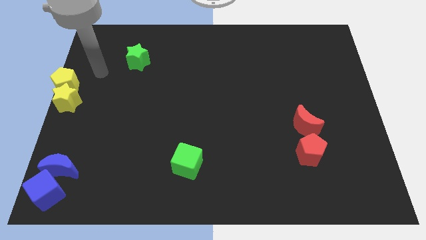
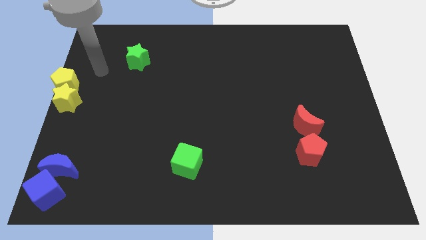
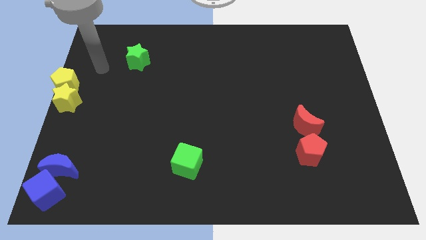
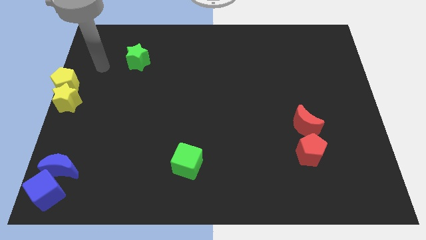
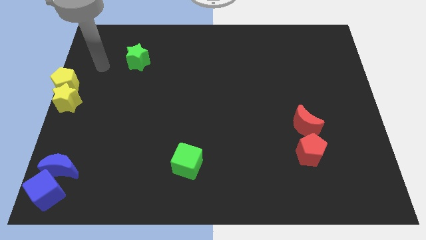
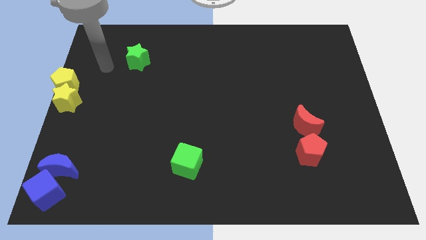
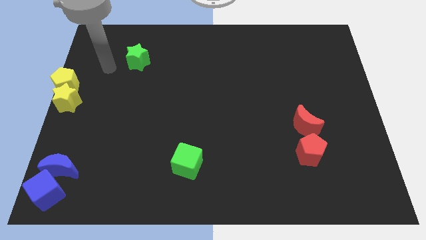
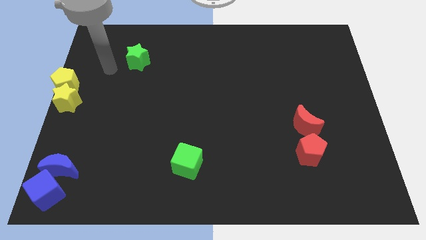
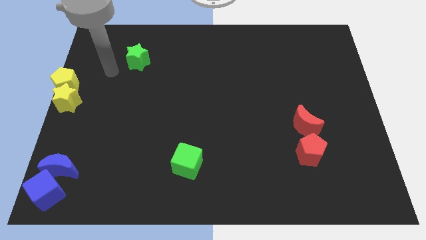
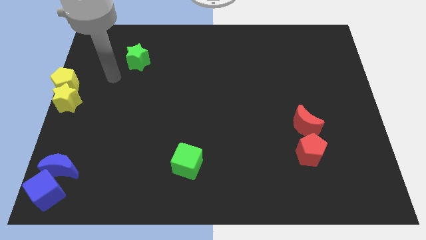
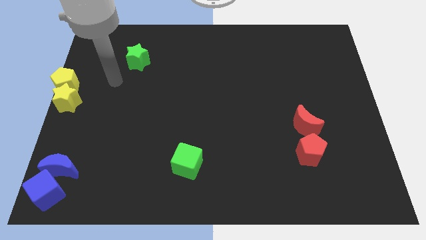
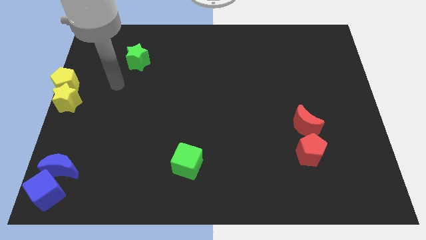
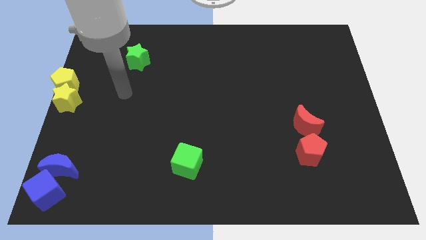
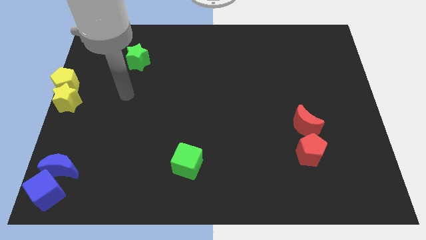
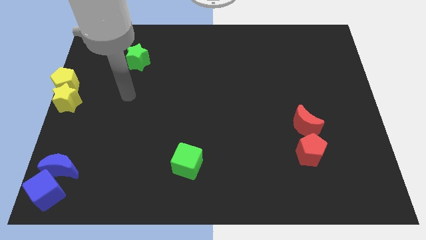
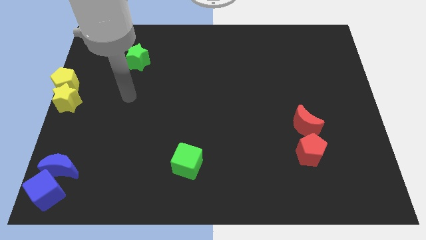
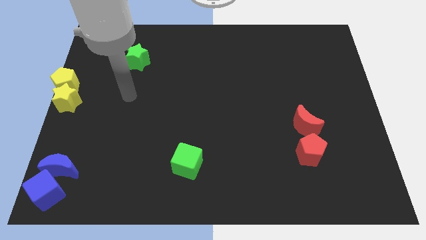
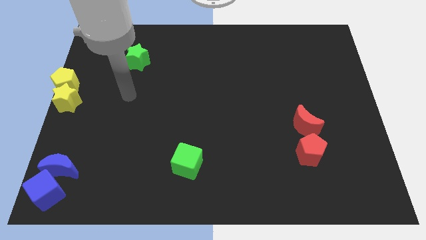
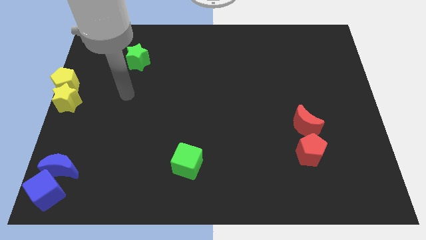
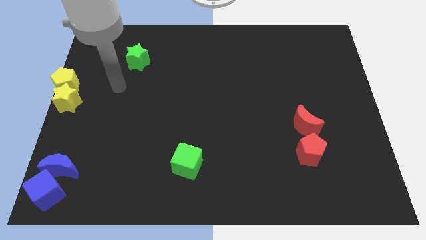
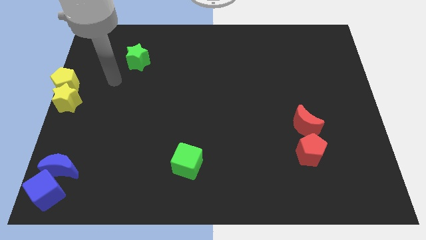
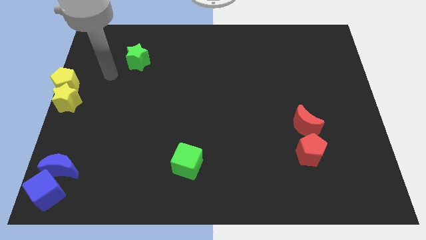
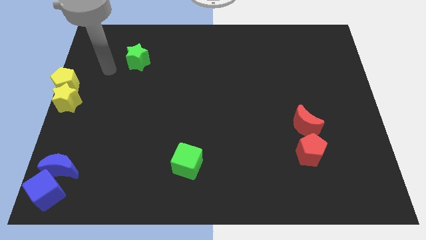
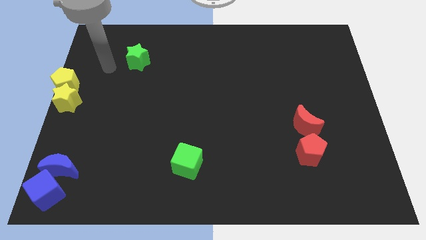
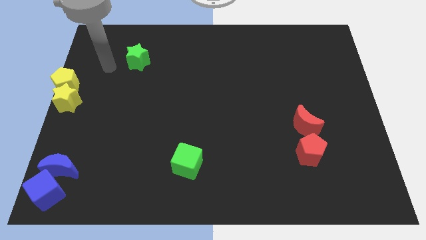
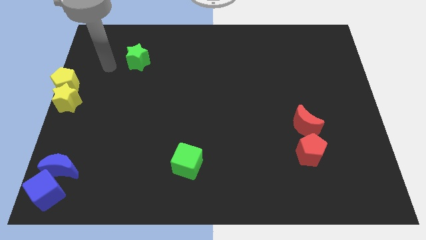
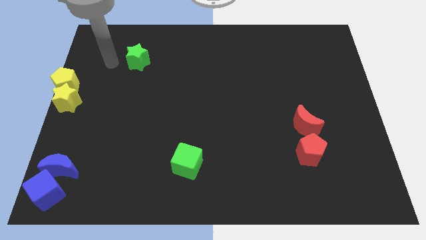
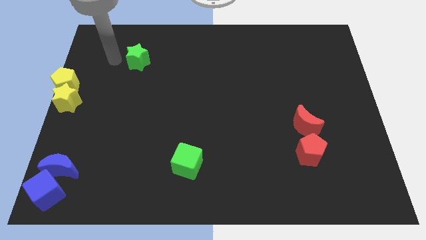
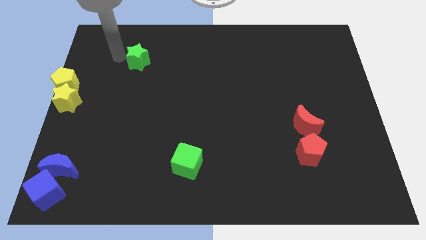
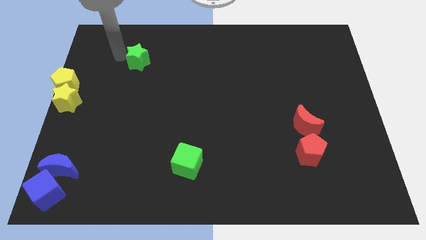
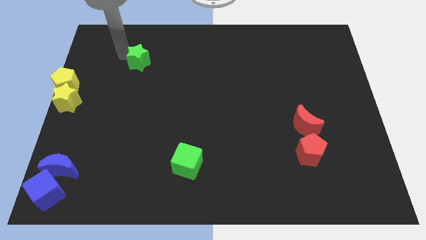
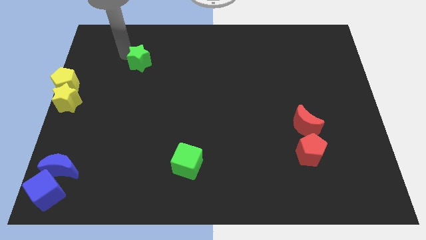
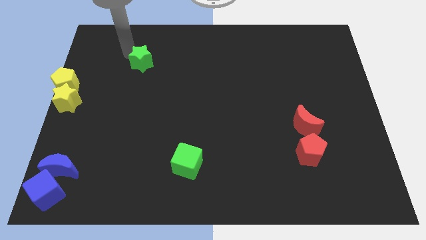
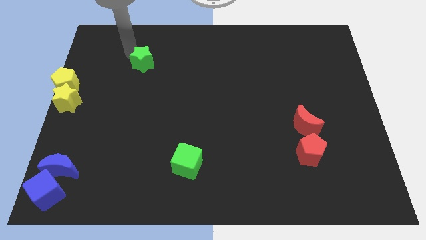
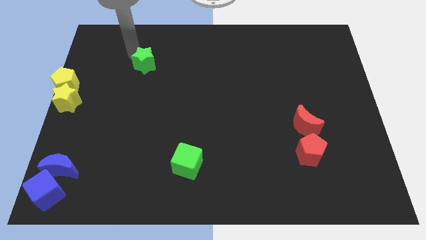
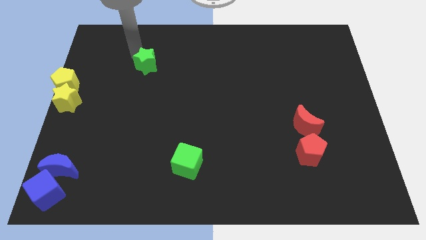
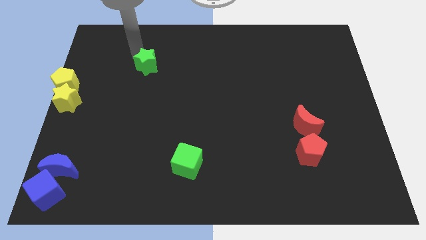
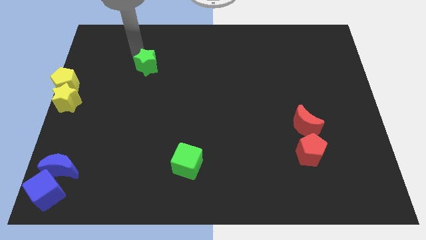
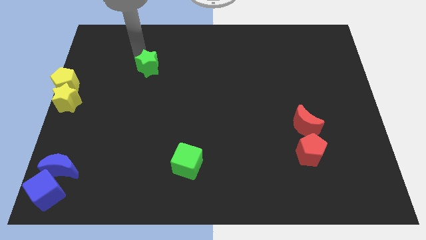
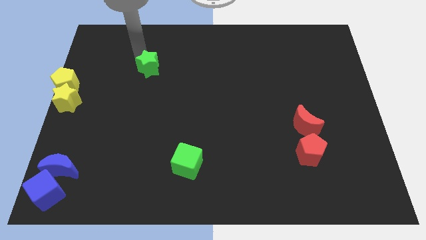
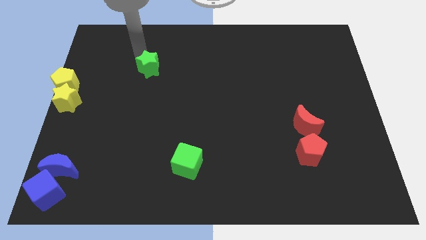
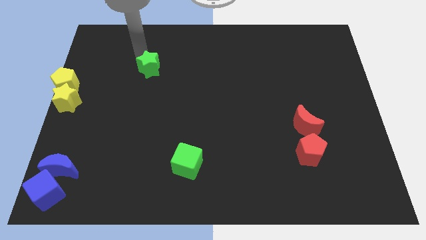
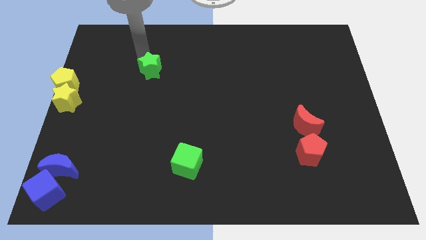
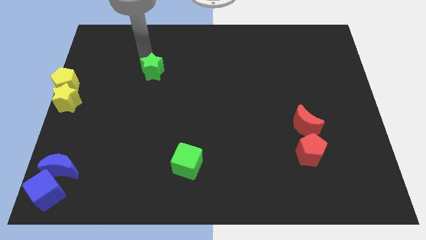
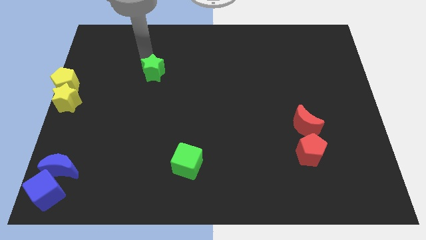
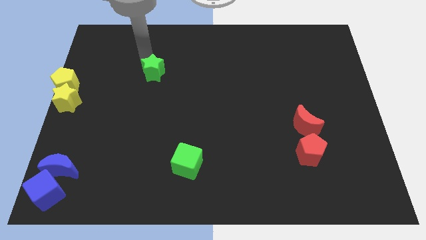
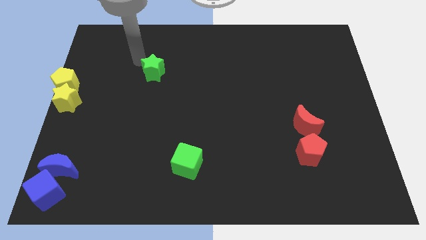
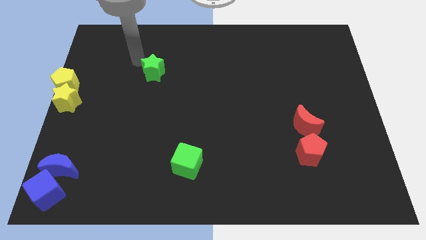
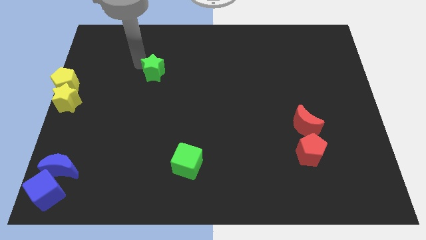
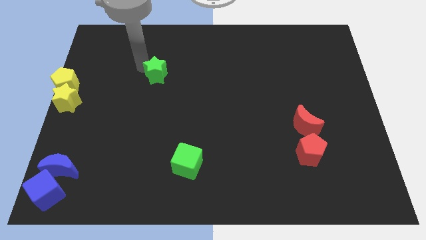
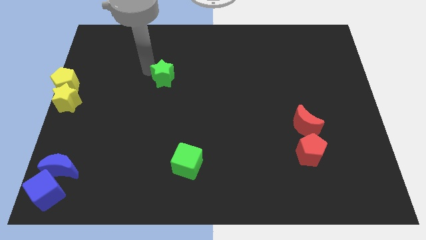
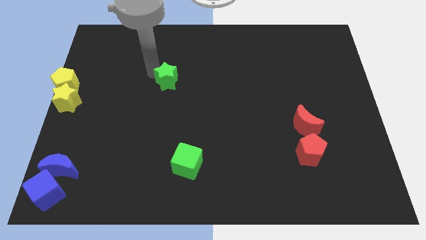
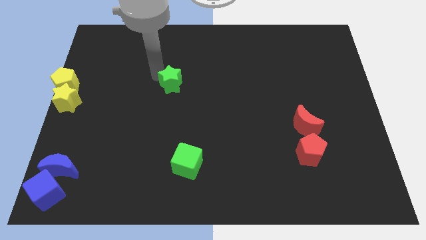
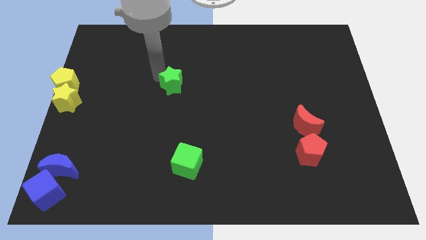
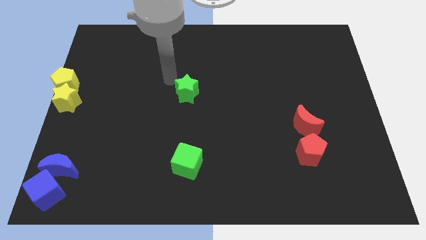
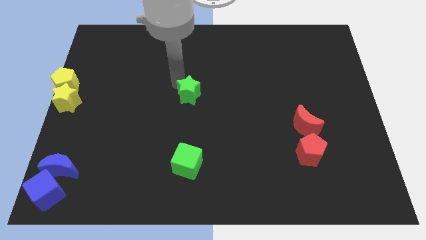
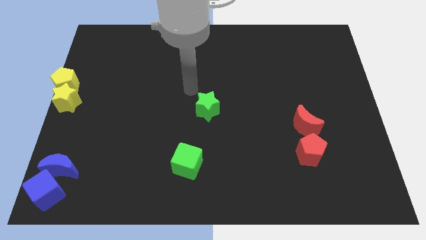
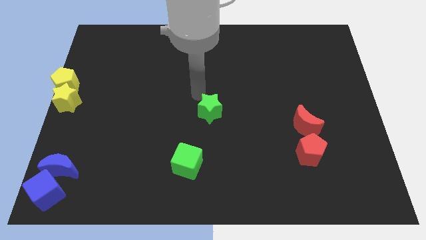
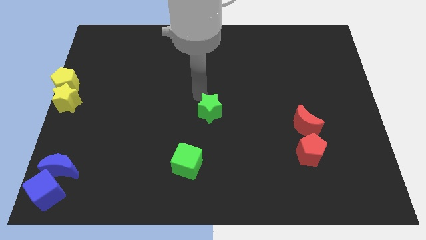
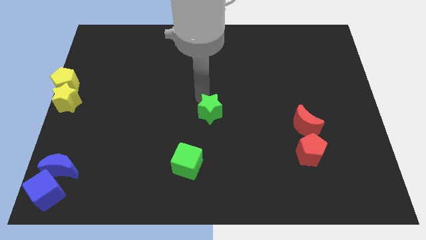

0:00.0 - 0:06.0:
push the green star to the center of the board

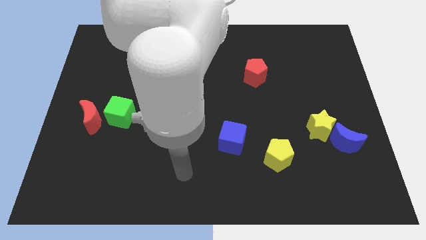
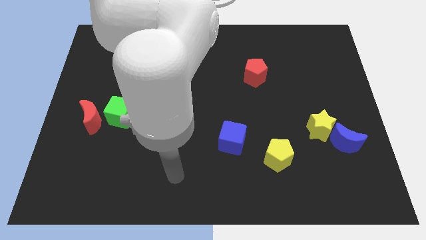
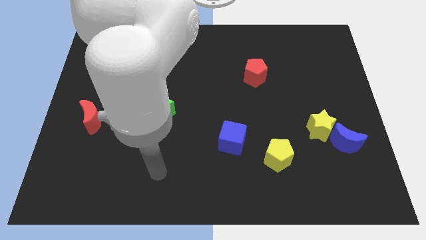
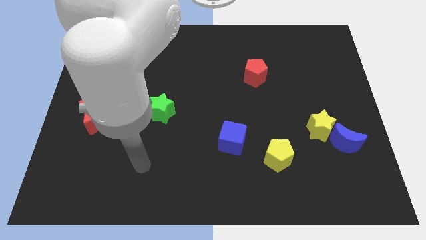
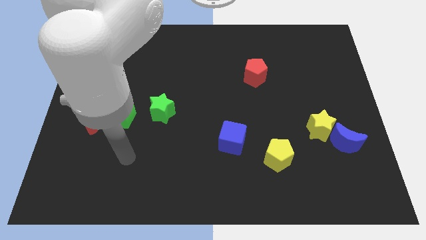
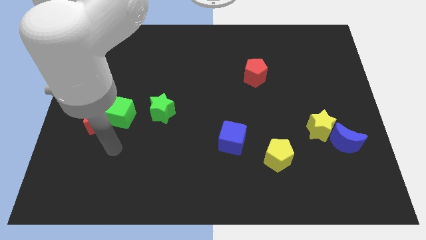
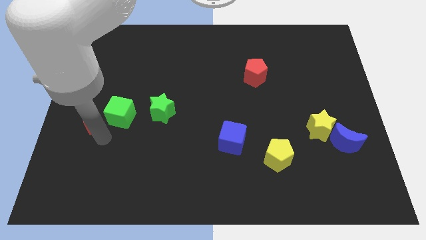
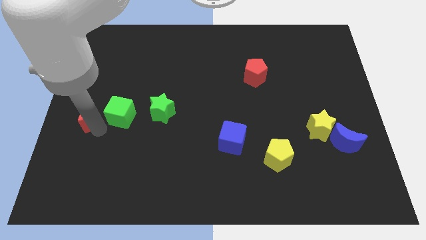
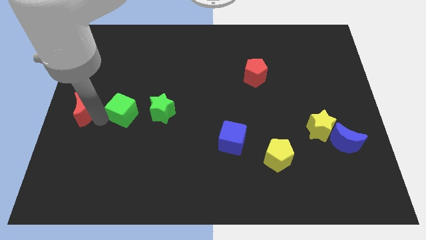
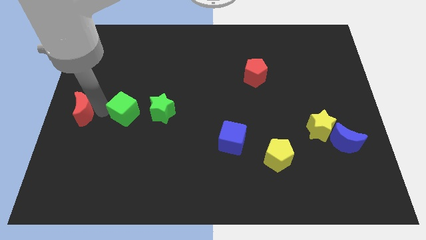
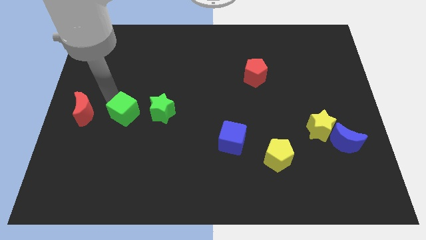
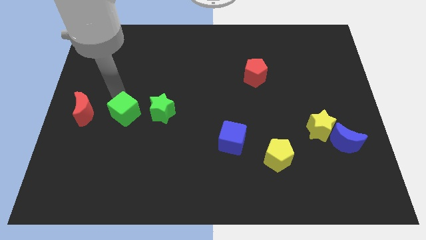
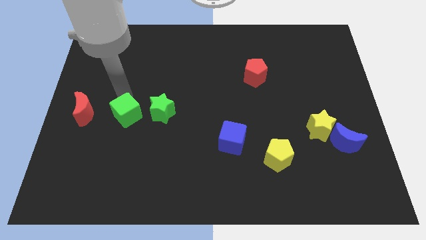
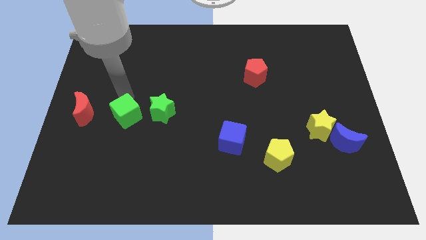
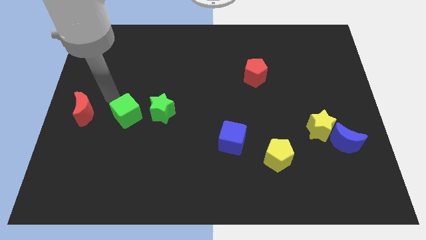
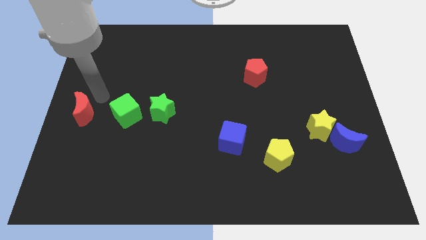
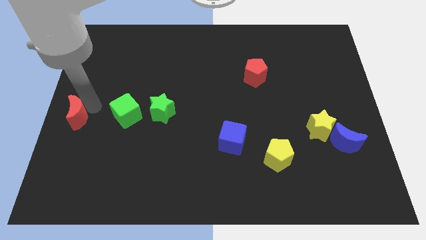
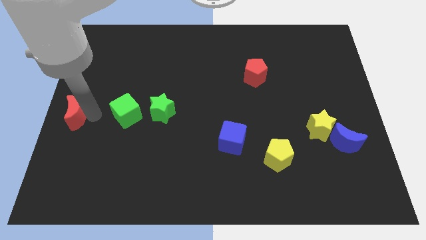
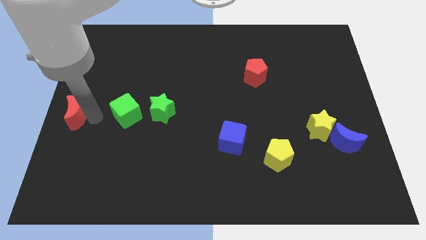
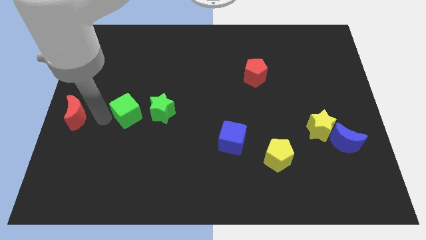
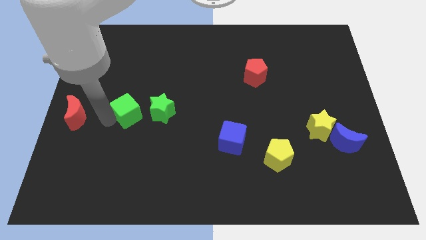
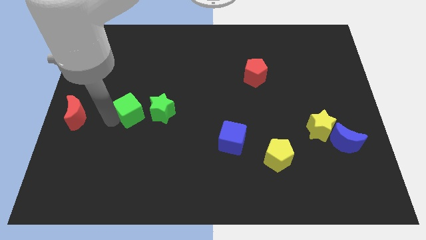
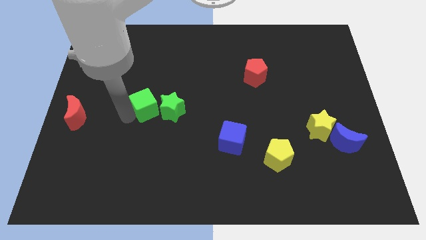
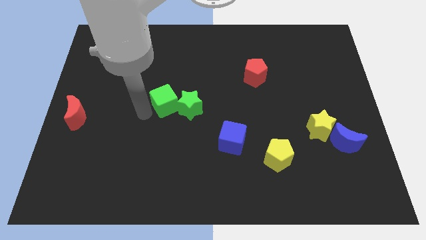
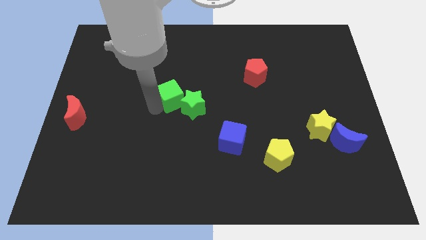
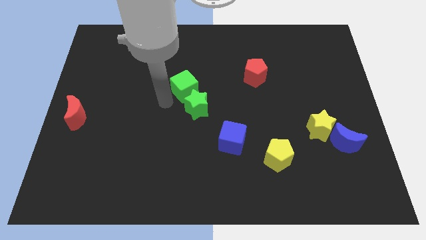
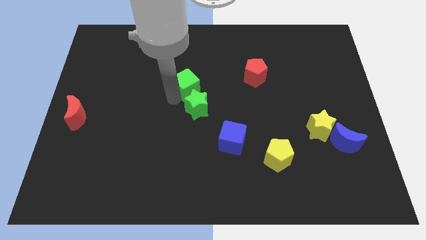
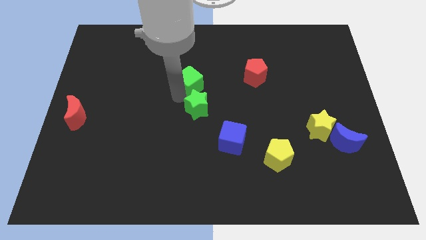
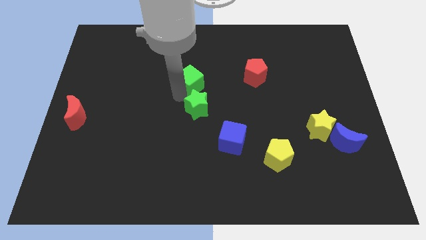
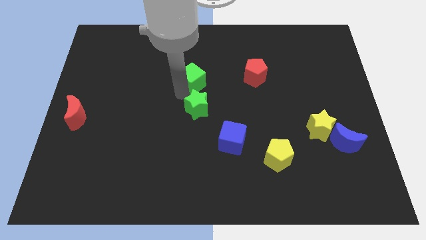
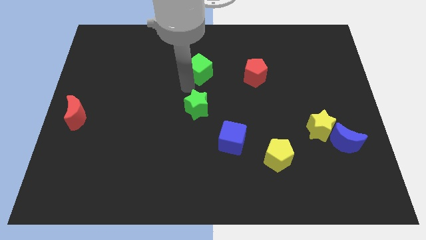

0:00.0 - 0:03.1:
place the green cube above the green star
